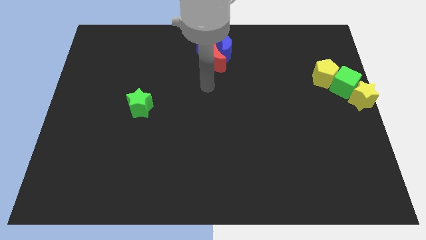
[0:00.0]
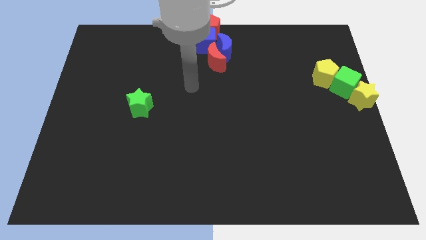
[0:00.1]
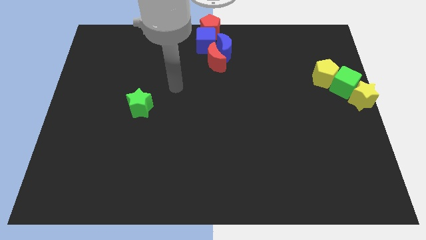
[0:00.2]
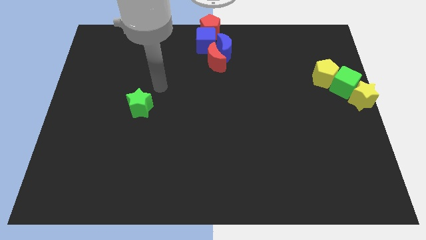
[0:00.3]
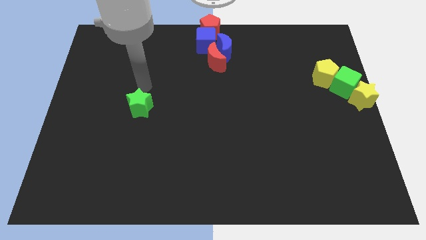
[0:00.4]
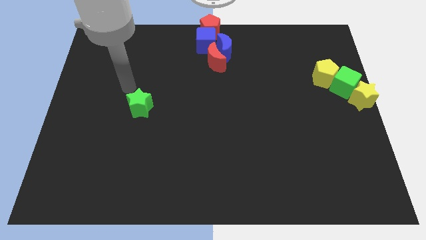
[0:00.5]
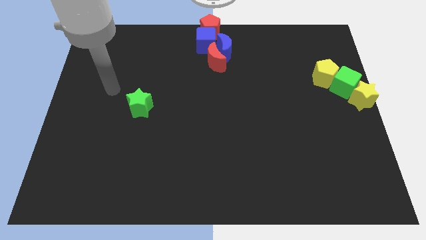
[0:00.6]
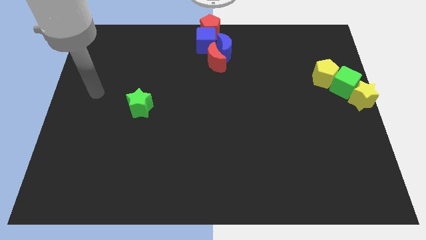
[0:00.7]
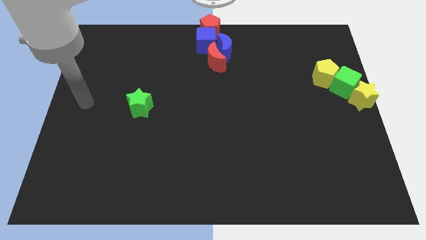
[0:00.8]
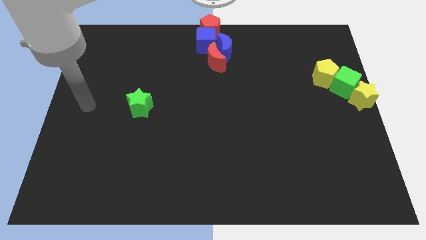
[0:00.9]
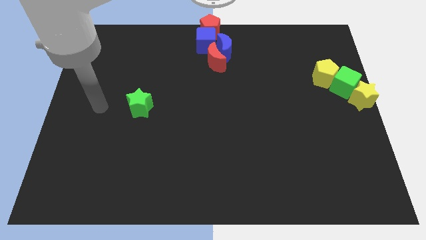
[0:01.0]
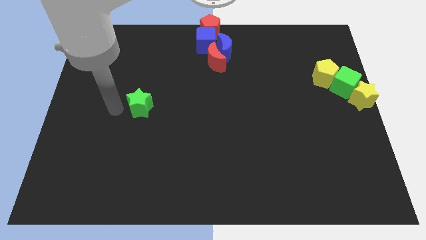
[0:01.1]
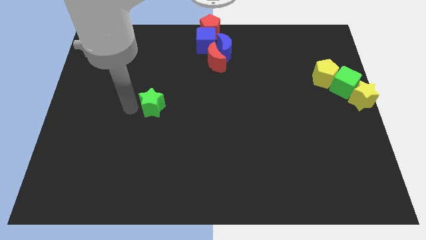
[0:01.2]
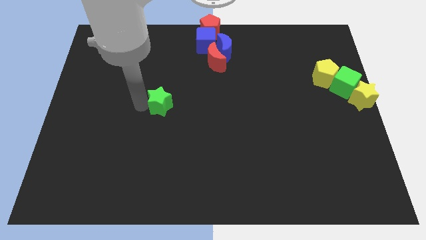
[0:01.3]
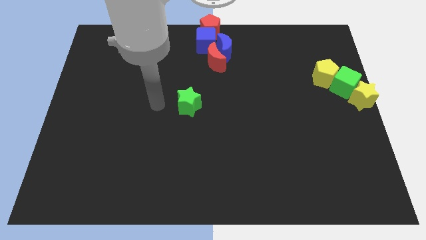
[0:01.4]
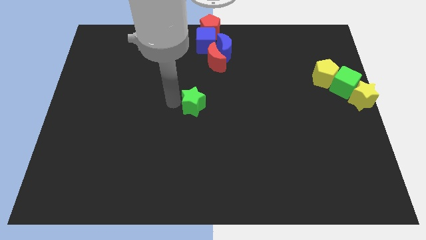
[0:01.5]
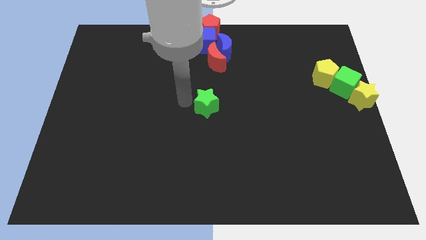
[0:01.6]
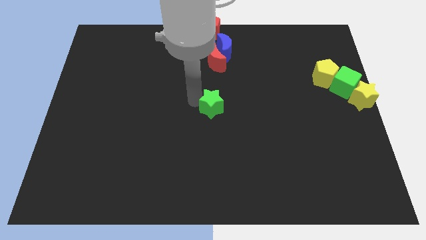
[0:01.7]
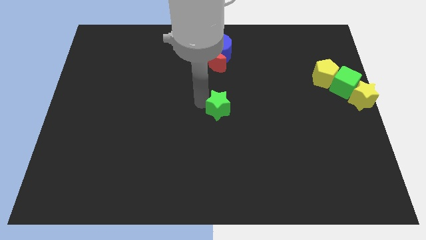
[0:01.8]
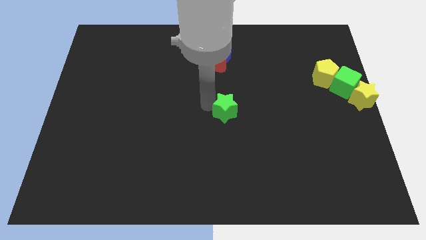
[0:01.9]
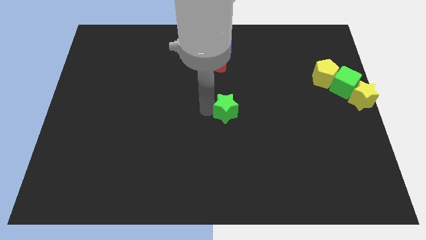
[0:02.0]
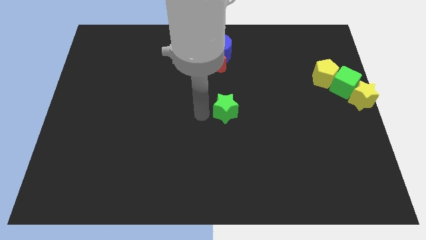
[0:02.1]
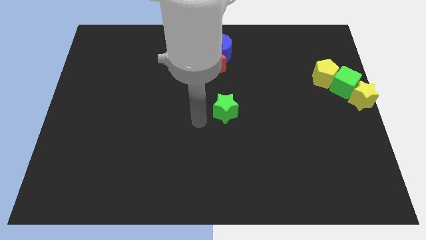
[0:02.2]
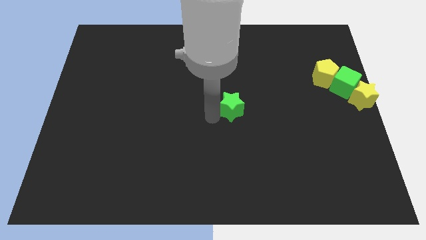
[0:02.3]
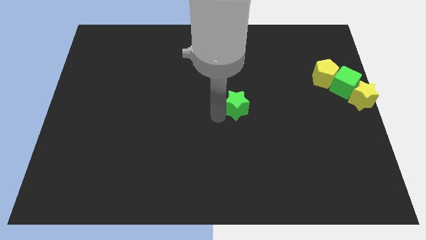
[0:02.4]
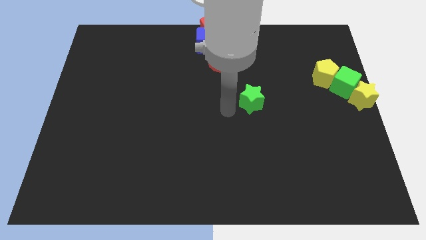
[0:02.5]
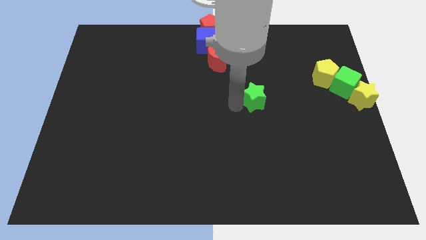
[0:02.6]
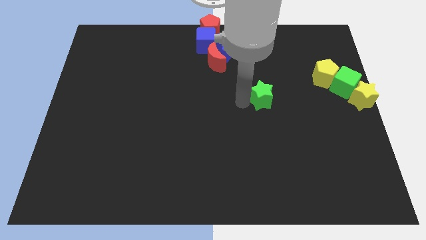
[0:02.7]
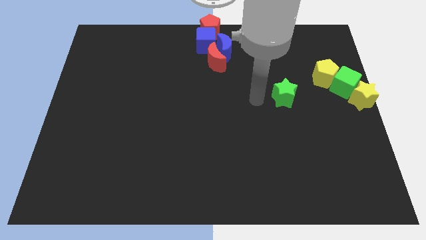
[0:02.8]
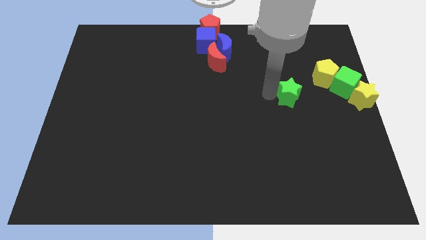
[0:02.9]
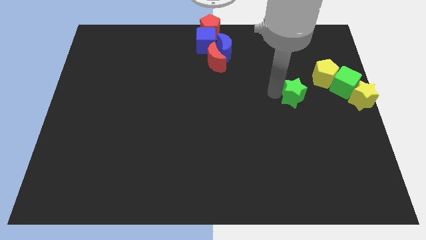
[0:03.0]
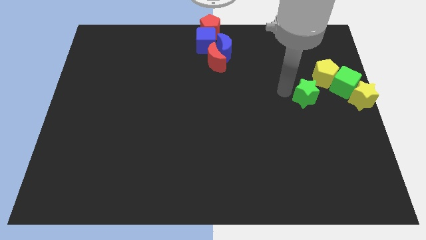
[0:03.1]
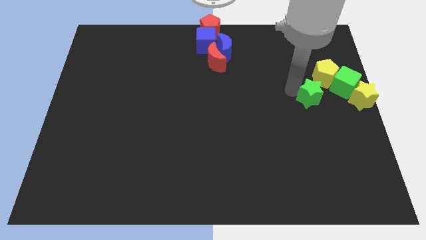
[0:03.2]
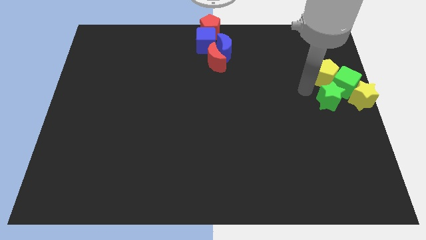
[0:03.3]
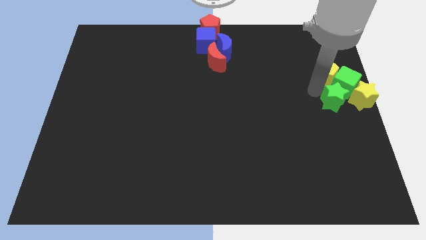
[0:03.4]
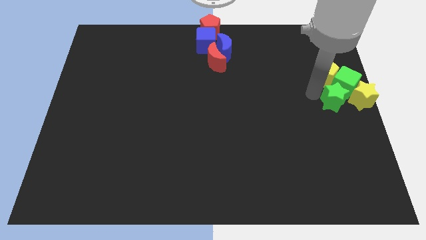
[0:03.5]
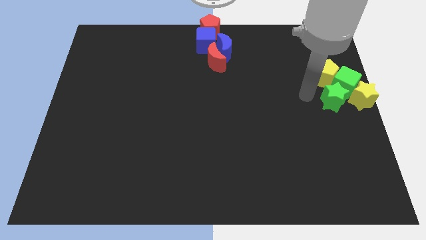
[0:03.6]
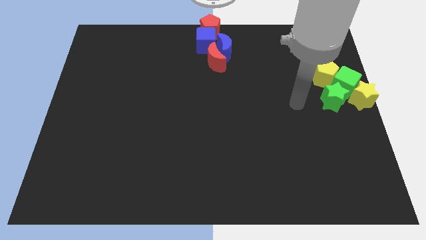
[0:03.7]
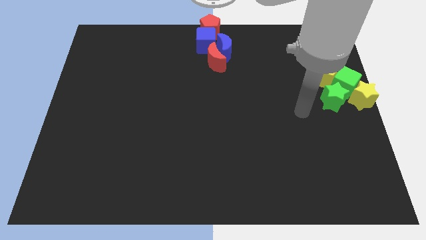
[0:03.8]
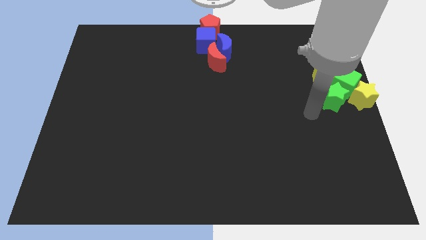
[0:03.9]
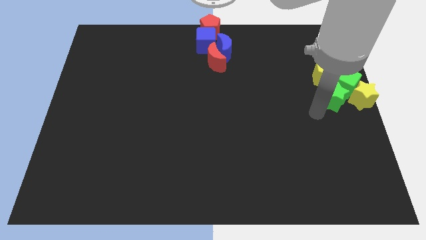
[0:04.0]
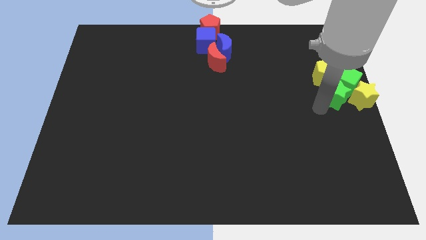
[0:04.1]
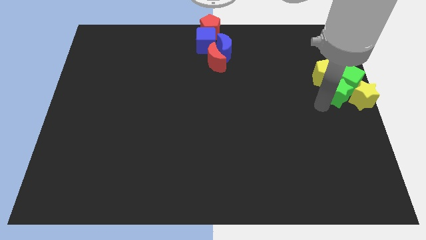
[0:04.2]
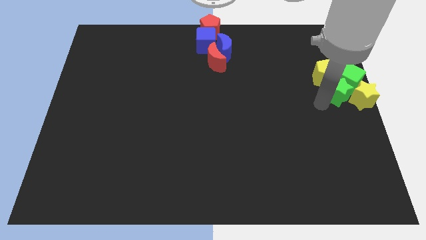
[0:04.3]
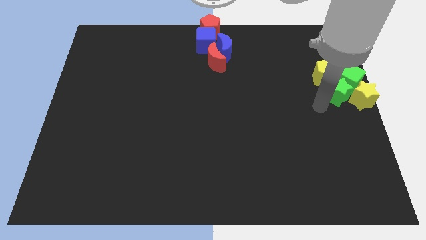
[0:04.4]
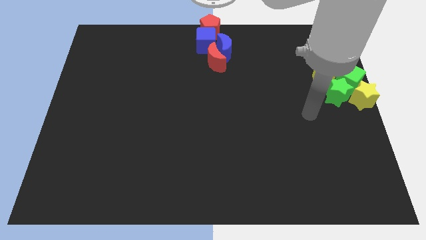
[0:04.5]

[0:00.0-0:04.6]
push the green star into the bottom side of the green cube

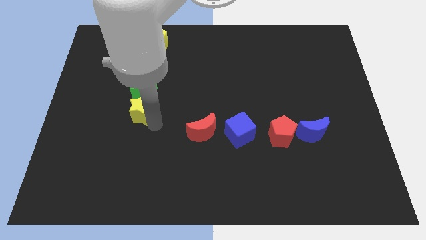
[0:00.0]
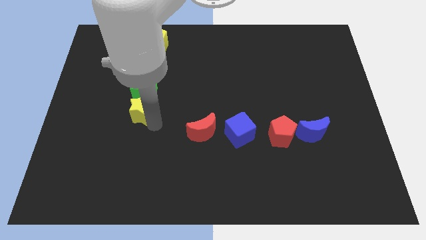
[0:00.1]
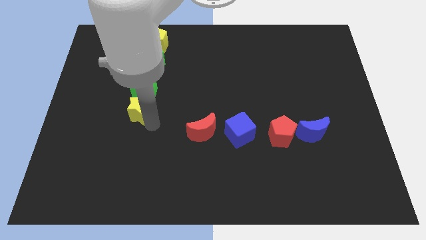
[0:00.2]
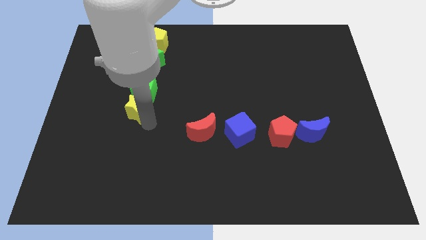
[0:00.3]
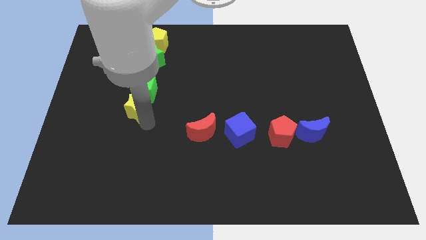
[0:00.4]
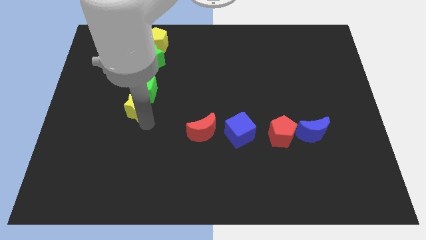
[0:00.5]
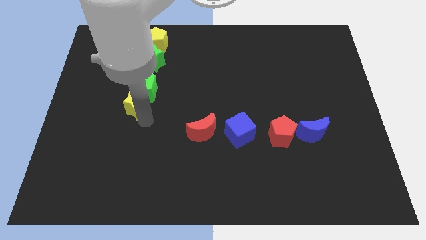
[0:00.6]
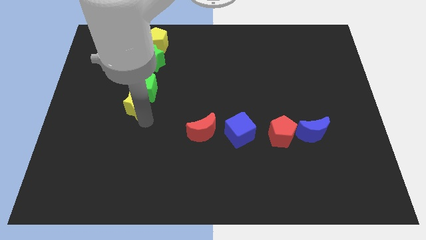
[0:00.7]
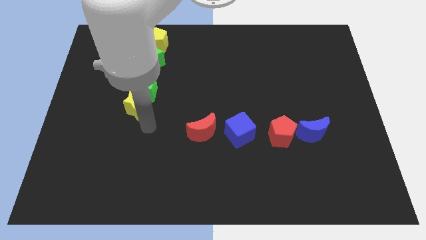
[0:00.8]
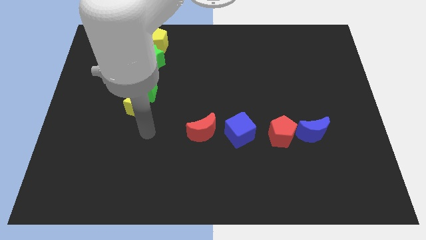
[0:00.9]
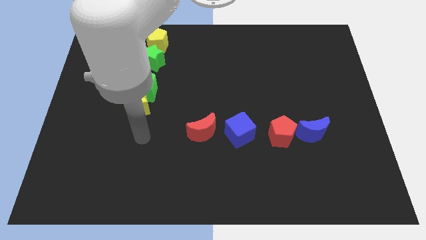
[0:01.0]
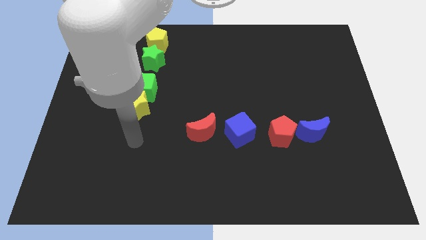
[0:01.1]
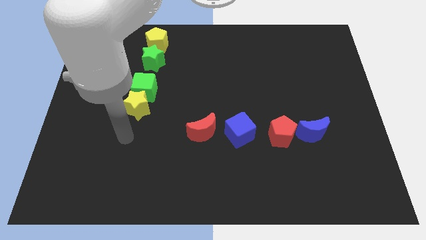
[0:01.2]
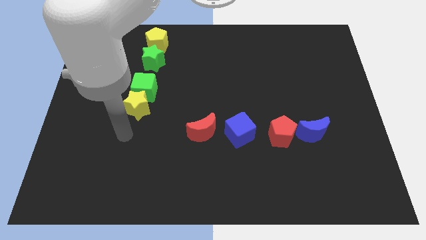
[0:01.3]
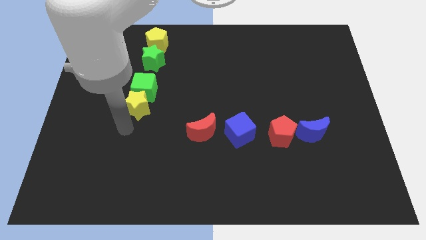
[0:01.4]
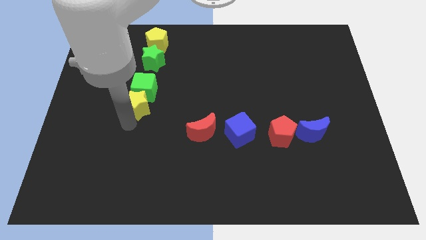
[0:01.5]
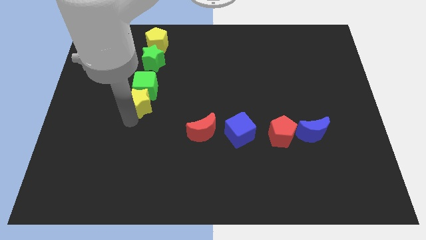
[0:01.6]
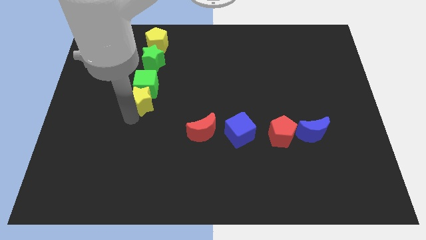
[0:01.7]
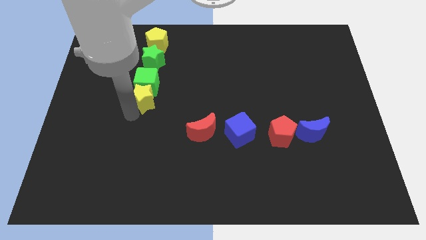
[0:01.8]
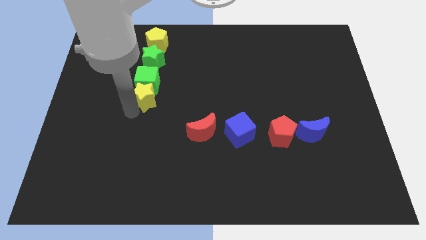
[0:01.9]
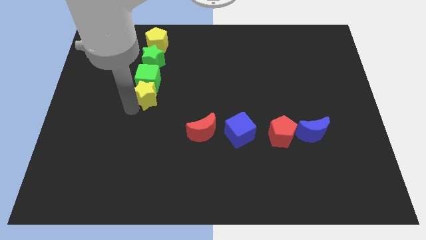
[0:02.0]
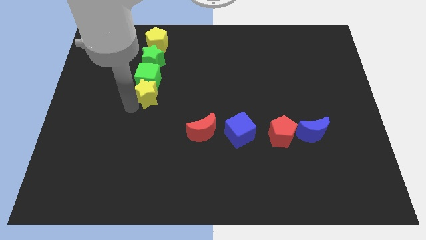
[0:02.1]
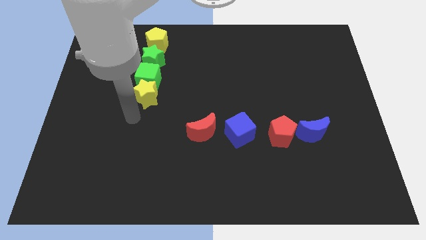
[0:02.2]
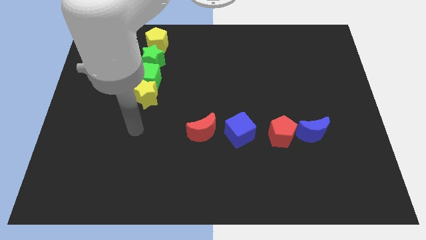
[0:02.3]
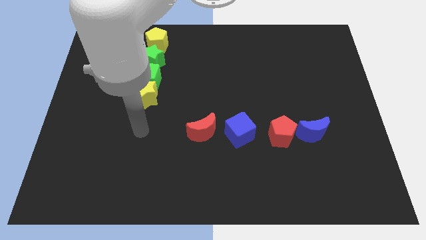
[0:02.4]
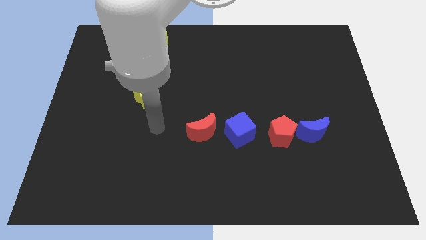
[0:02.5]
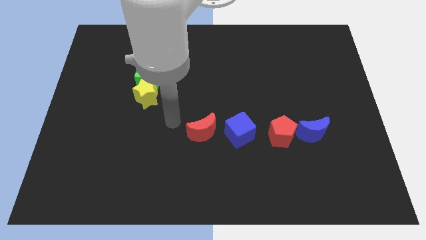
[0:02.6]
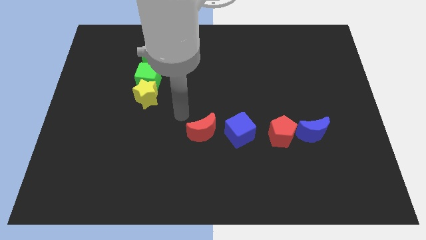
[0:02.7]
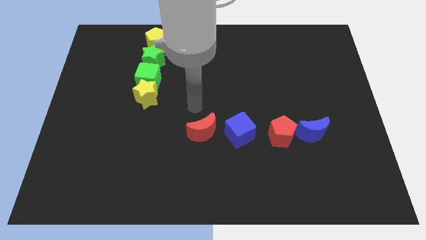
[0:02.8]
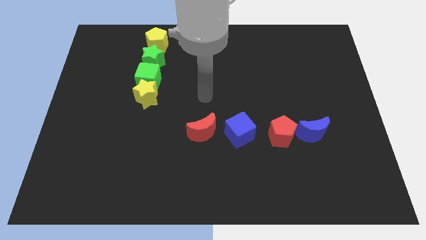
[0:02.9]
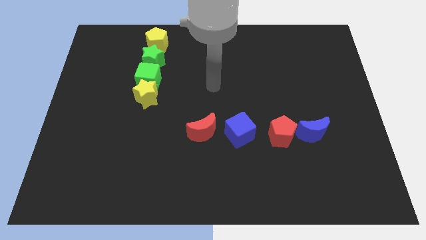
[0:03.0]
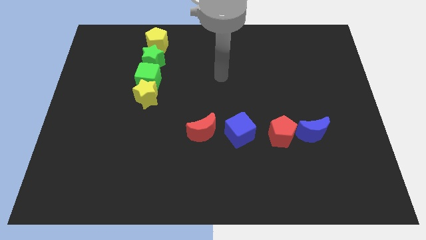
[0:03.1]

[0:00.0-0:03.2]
push yellow star towards green cube

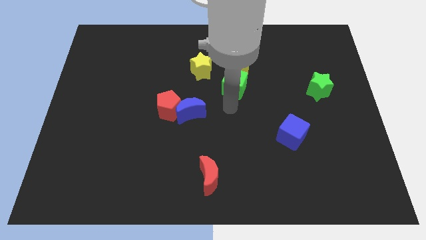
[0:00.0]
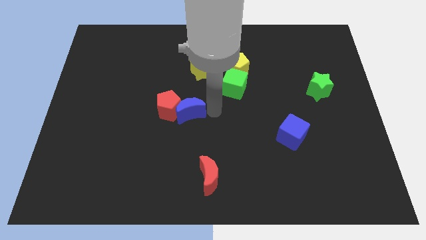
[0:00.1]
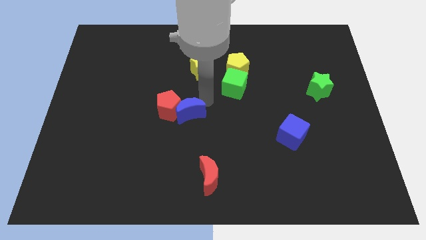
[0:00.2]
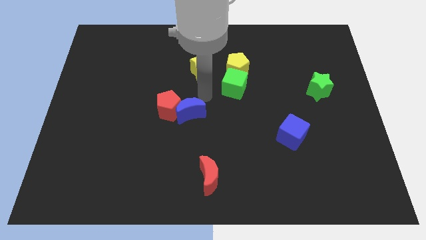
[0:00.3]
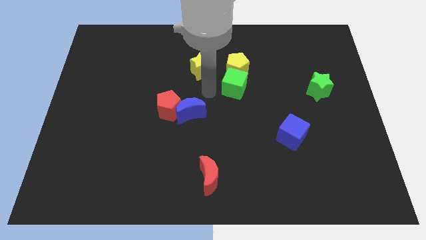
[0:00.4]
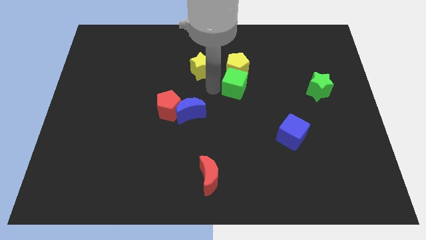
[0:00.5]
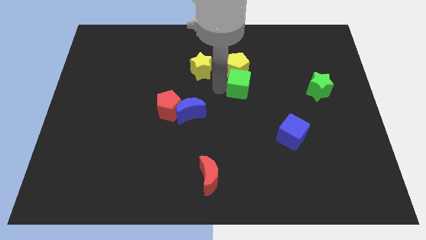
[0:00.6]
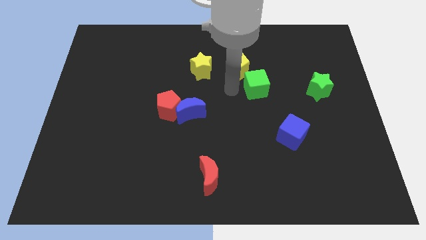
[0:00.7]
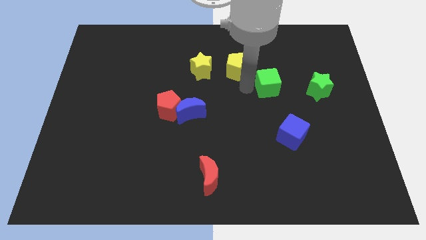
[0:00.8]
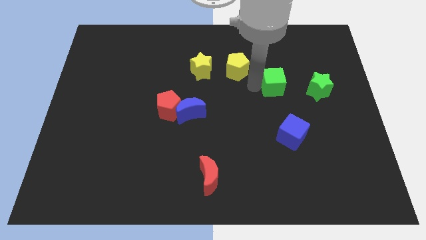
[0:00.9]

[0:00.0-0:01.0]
seperate green cube from yellow pentagon

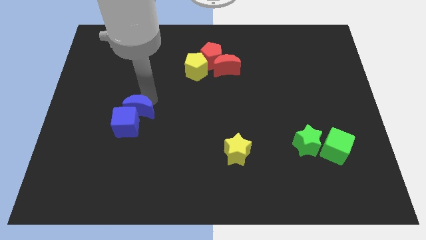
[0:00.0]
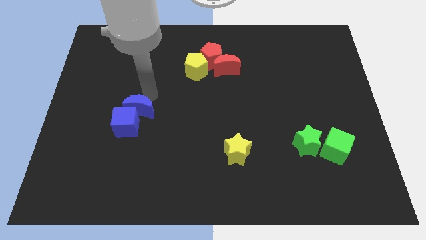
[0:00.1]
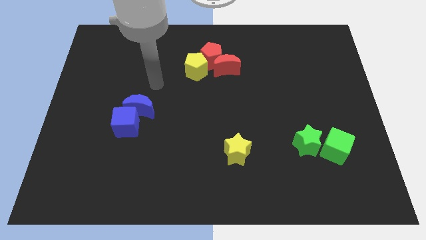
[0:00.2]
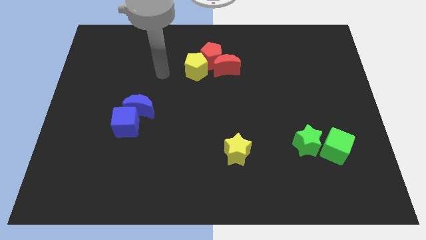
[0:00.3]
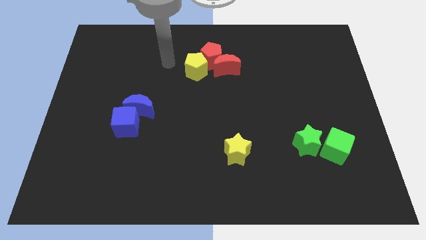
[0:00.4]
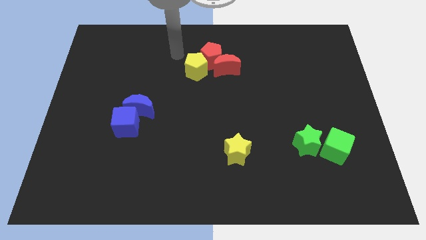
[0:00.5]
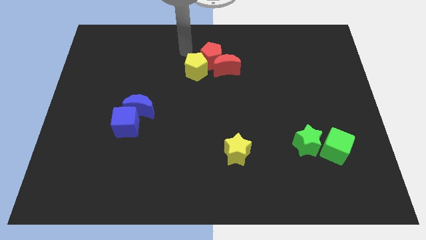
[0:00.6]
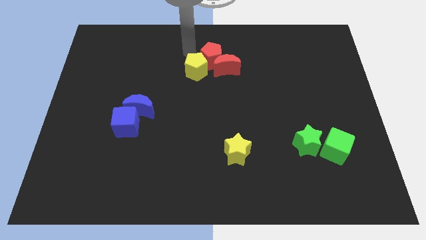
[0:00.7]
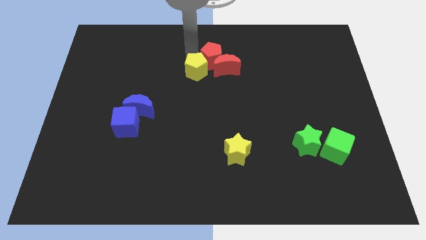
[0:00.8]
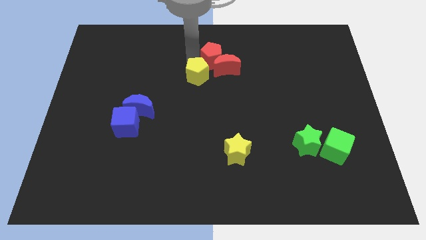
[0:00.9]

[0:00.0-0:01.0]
point your arm at the top of the yellow pentagon
